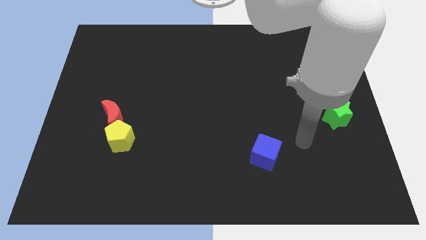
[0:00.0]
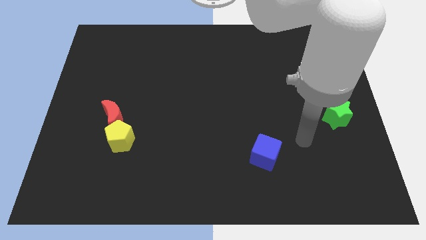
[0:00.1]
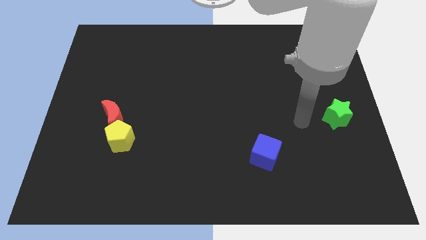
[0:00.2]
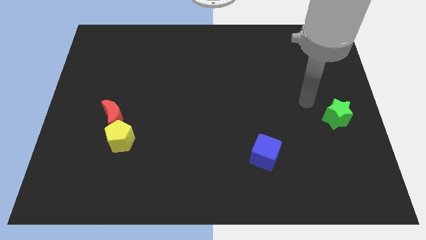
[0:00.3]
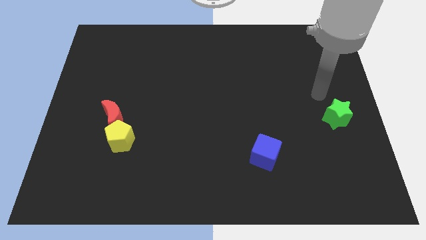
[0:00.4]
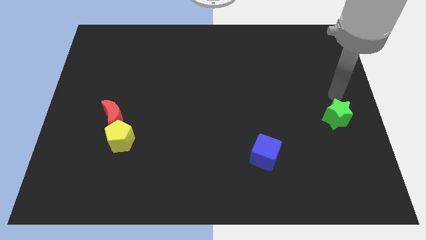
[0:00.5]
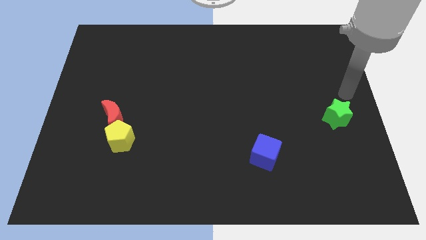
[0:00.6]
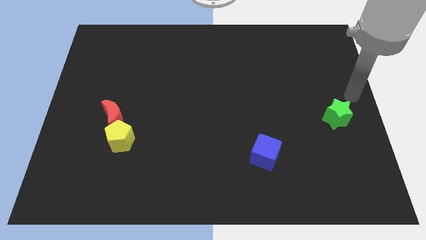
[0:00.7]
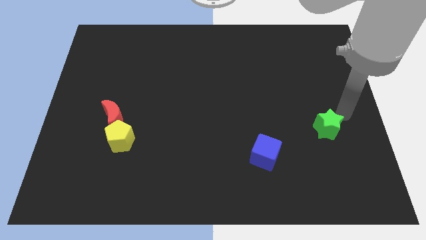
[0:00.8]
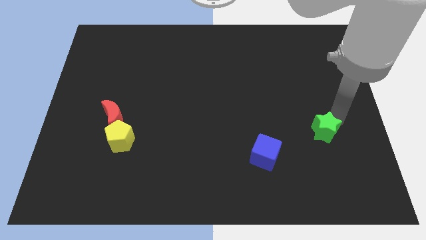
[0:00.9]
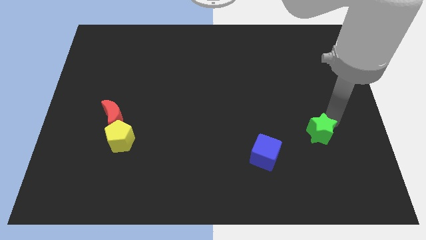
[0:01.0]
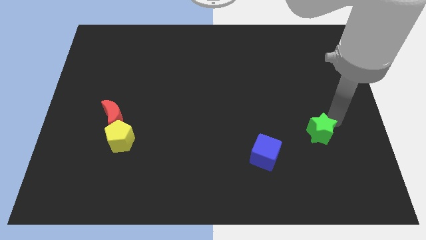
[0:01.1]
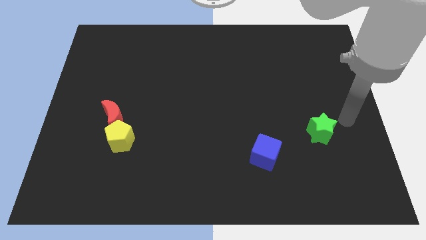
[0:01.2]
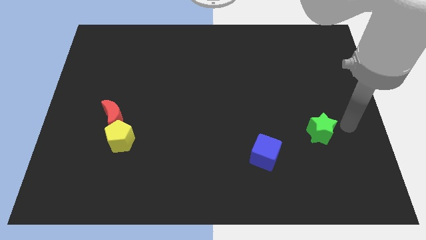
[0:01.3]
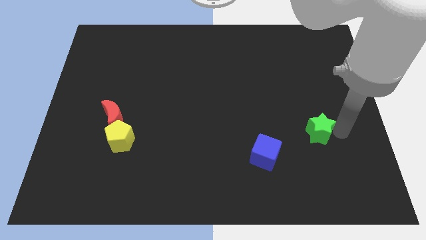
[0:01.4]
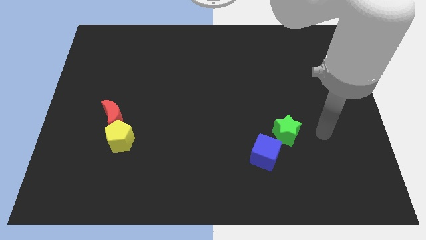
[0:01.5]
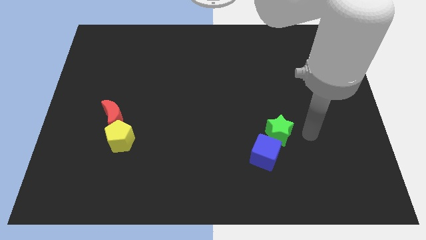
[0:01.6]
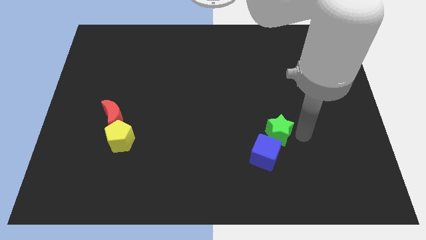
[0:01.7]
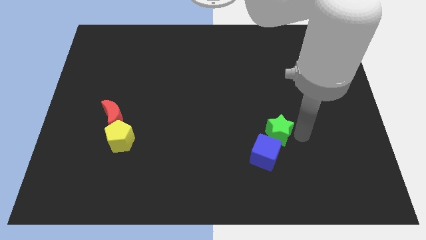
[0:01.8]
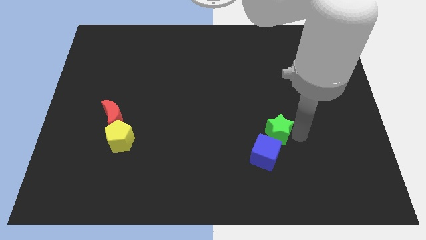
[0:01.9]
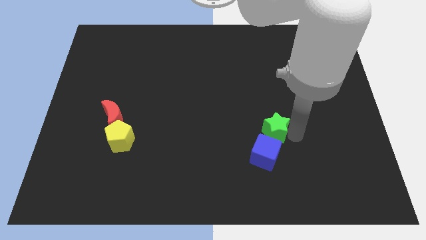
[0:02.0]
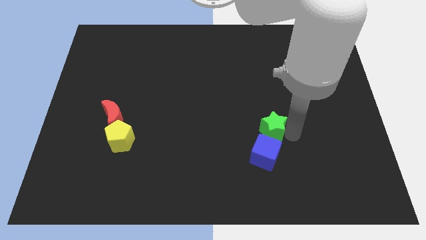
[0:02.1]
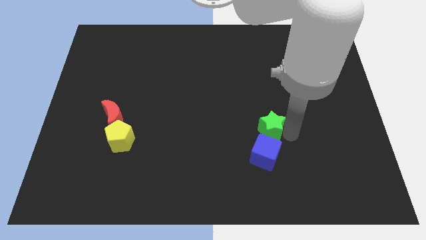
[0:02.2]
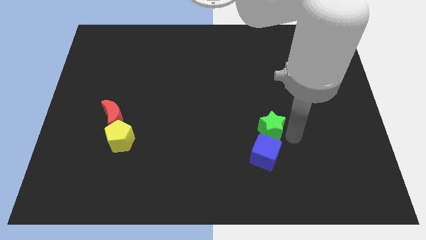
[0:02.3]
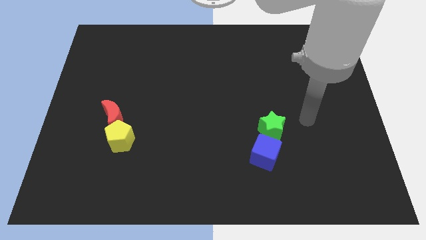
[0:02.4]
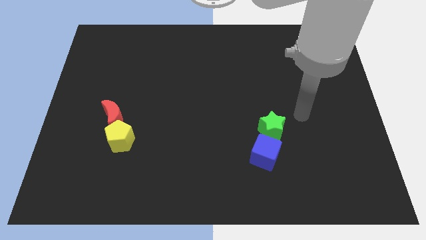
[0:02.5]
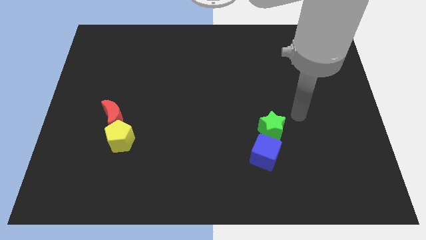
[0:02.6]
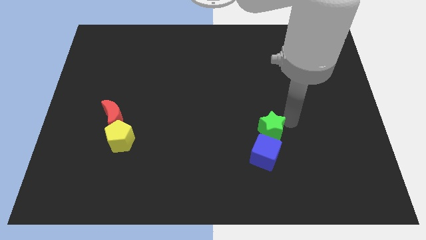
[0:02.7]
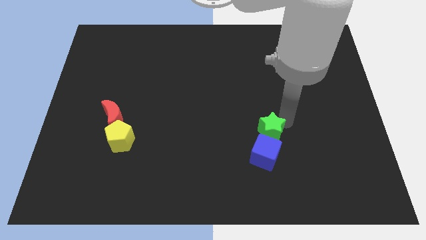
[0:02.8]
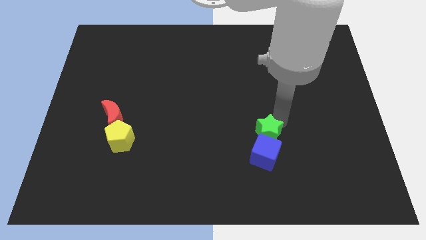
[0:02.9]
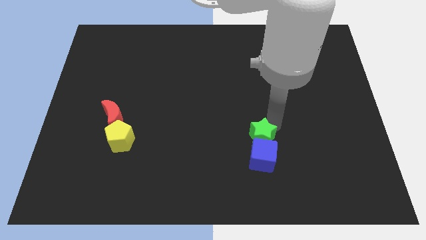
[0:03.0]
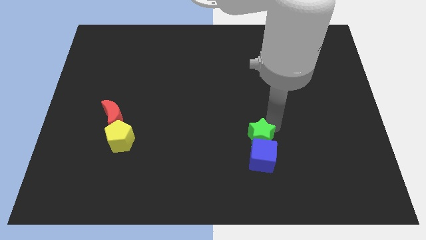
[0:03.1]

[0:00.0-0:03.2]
push the green star to the cube

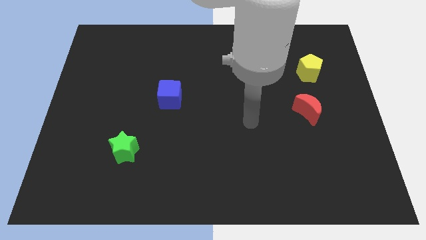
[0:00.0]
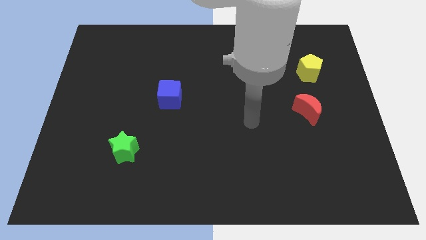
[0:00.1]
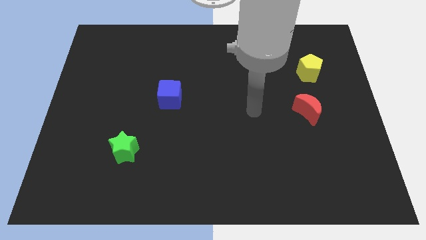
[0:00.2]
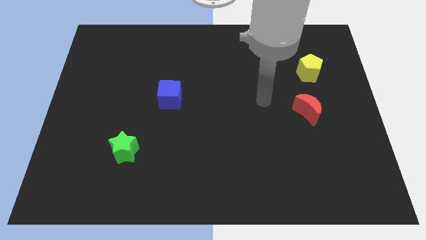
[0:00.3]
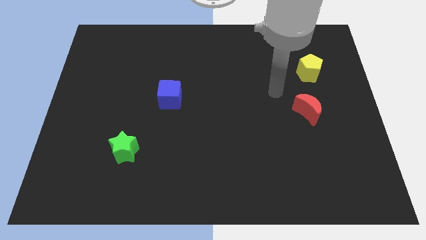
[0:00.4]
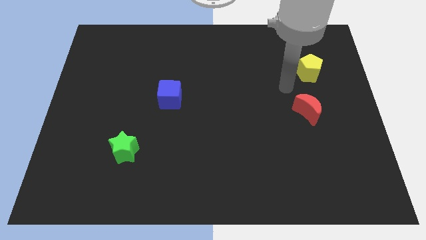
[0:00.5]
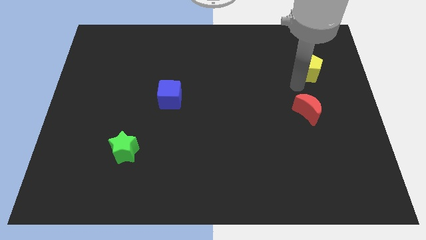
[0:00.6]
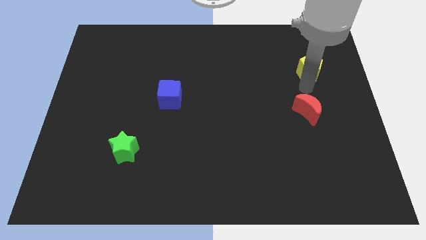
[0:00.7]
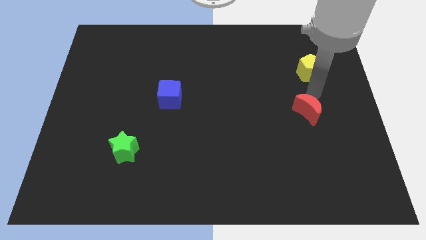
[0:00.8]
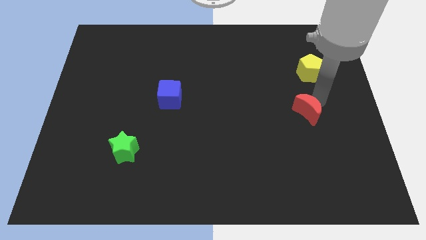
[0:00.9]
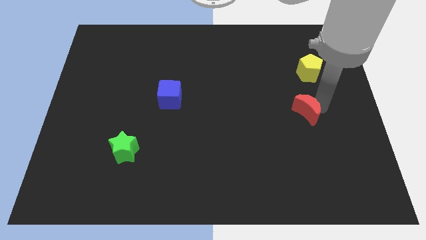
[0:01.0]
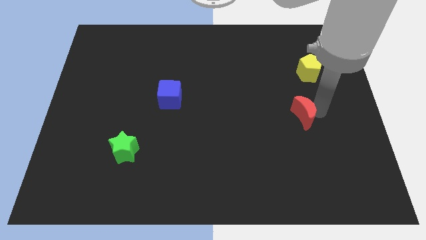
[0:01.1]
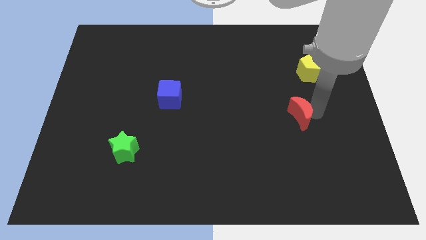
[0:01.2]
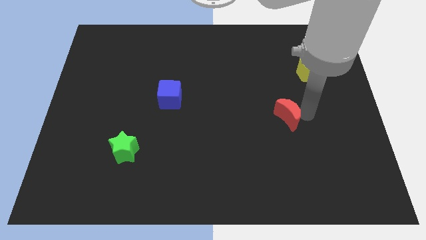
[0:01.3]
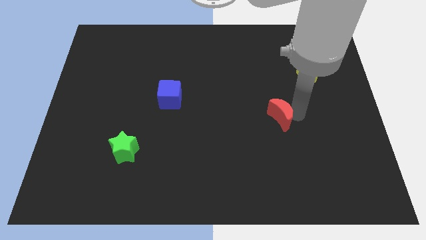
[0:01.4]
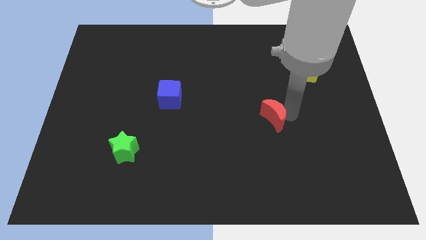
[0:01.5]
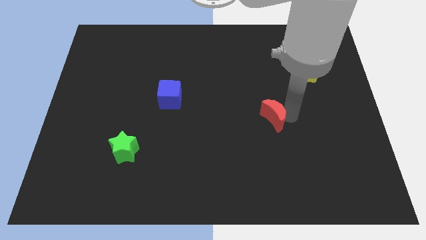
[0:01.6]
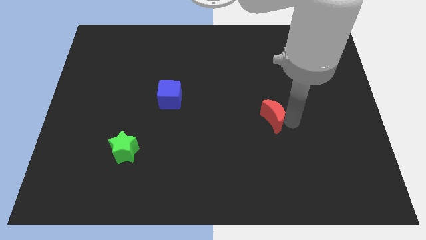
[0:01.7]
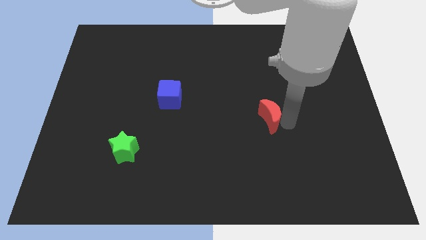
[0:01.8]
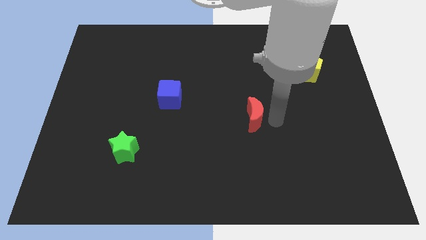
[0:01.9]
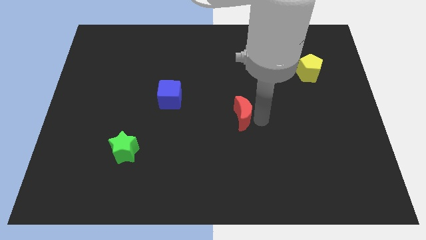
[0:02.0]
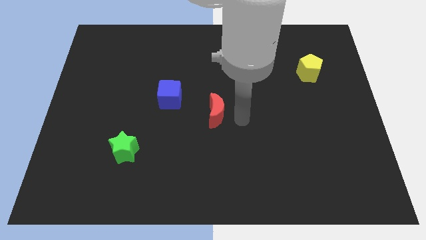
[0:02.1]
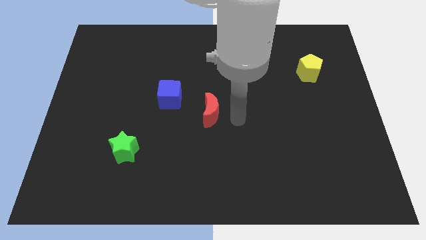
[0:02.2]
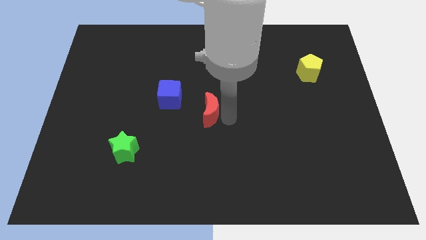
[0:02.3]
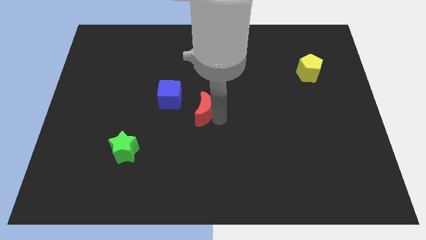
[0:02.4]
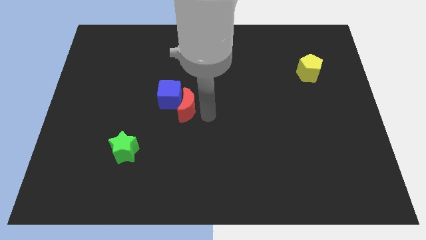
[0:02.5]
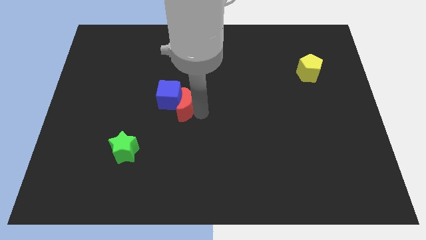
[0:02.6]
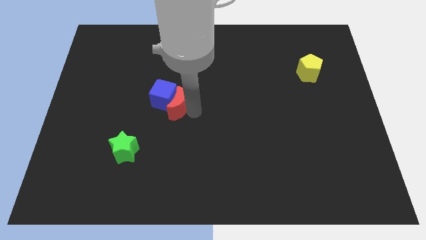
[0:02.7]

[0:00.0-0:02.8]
push the moon to the cube

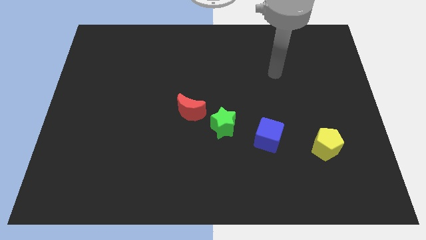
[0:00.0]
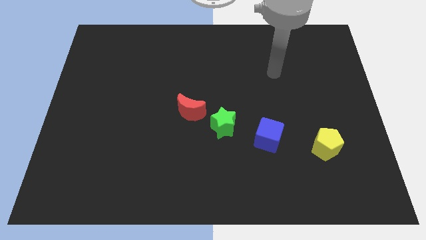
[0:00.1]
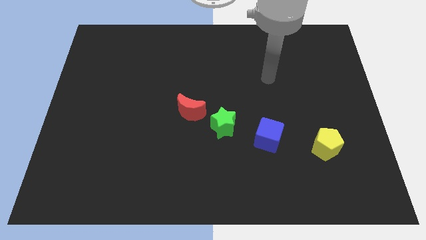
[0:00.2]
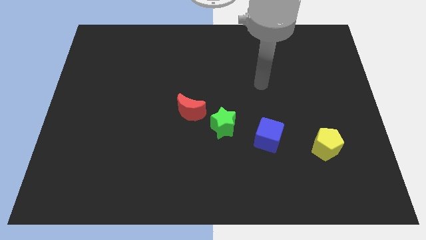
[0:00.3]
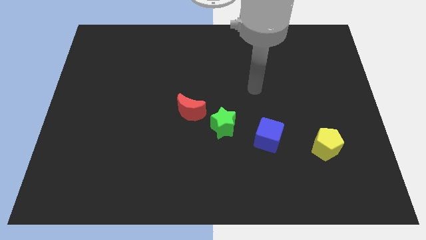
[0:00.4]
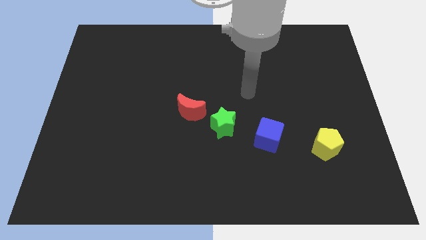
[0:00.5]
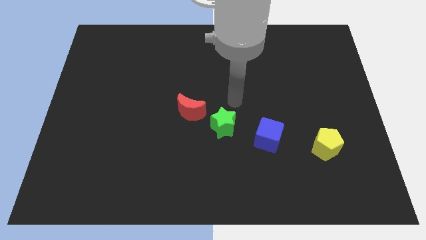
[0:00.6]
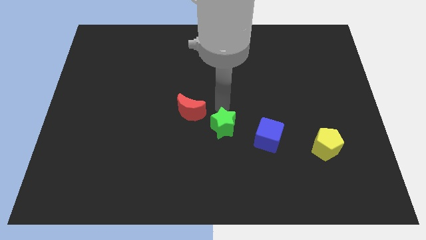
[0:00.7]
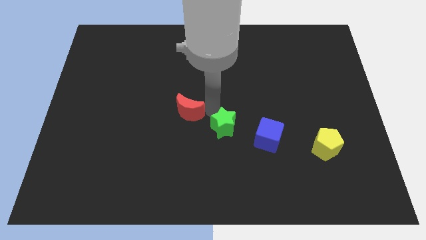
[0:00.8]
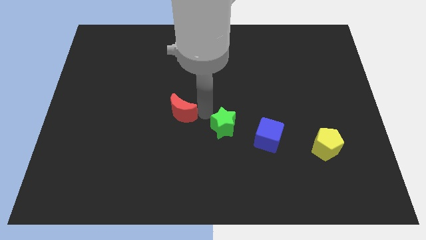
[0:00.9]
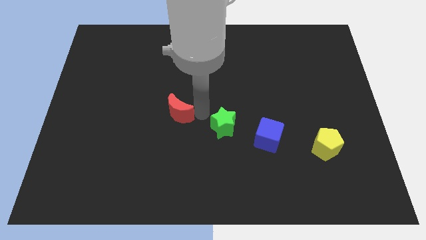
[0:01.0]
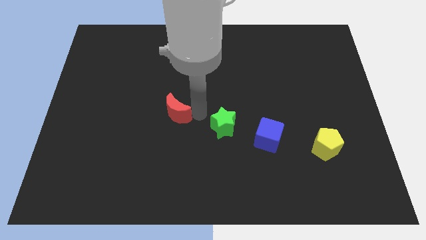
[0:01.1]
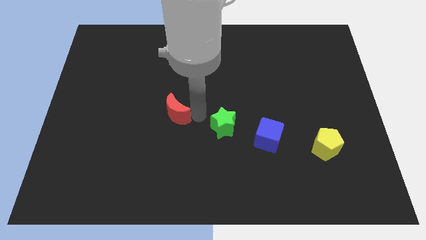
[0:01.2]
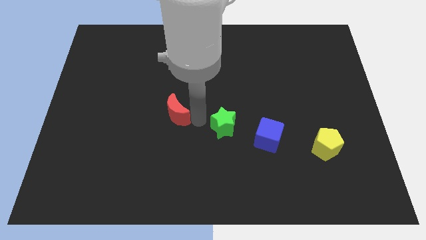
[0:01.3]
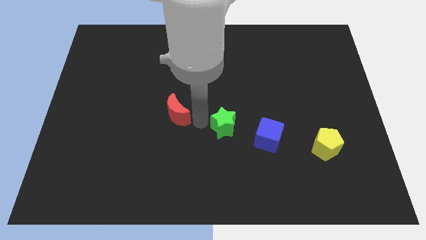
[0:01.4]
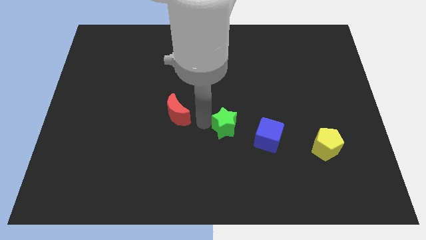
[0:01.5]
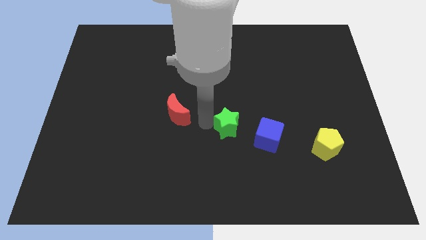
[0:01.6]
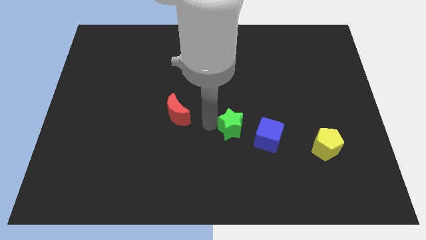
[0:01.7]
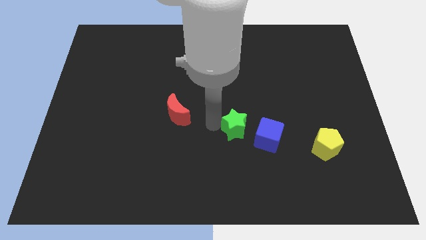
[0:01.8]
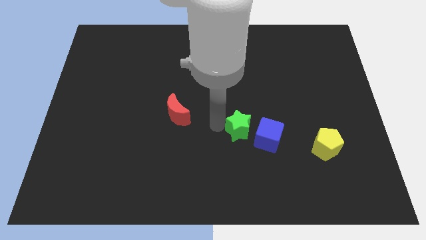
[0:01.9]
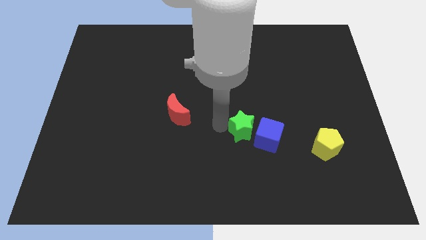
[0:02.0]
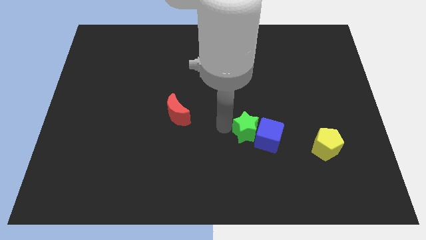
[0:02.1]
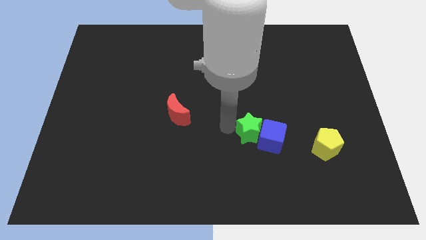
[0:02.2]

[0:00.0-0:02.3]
slide the star to the blue cube

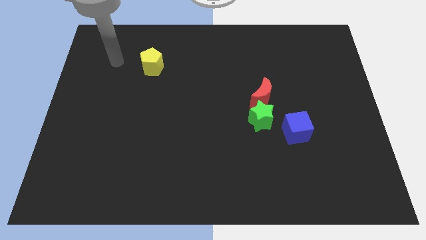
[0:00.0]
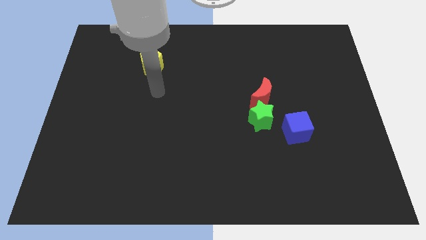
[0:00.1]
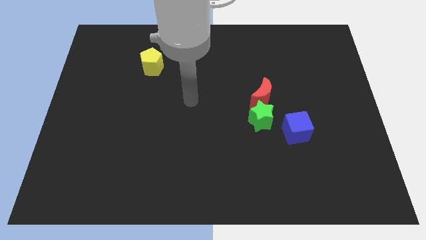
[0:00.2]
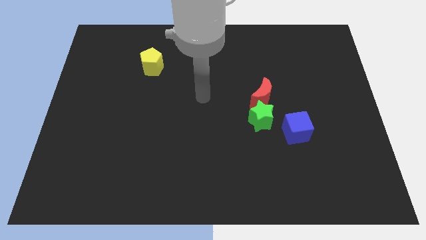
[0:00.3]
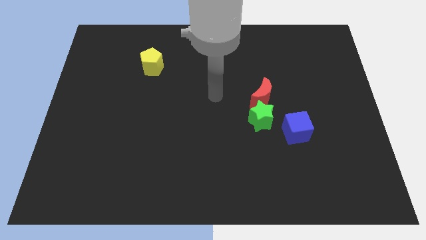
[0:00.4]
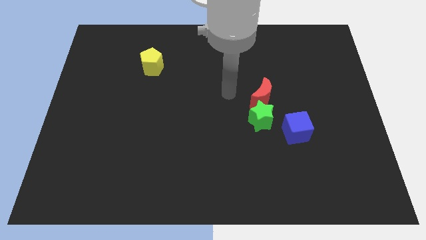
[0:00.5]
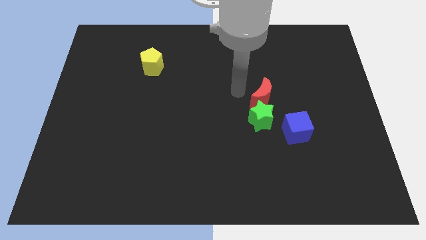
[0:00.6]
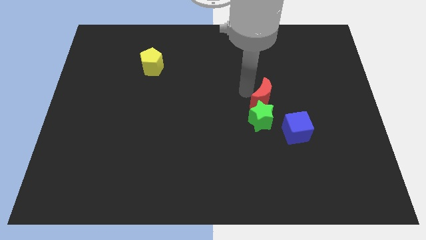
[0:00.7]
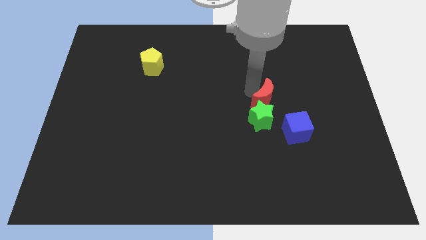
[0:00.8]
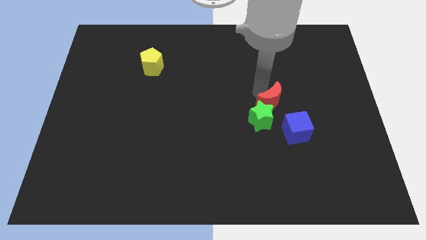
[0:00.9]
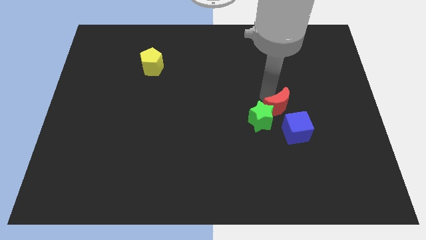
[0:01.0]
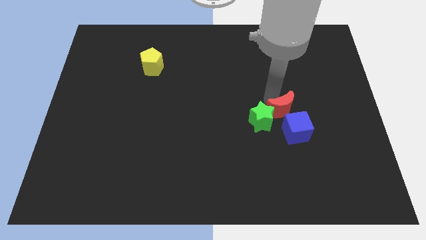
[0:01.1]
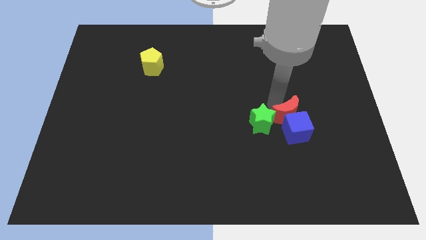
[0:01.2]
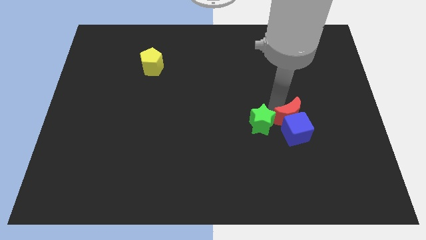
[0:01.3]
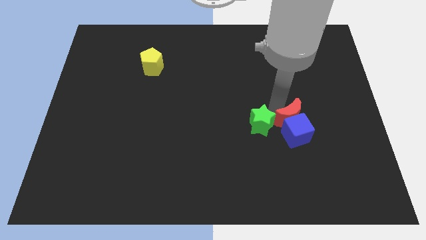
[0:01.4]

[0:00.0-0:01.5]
put the moon close to the cube
